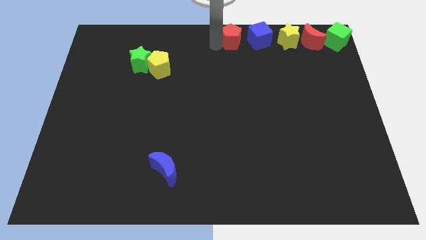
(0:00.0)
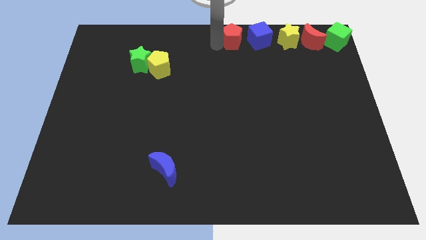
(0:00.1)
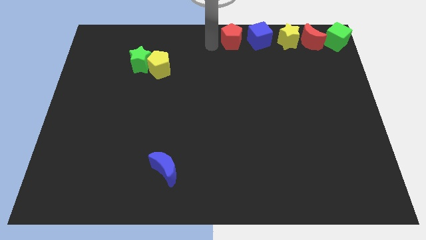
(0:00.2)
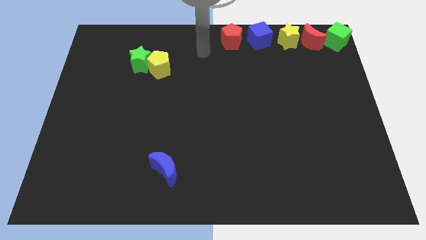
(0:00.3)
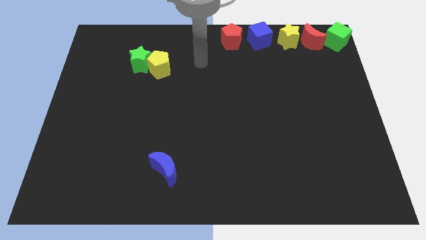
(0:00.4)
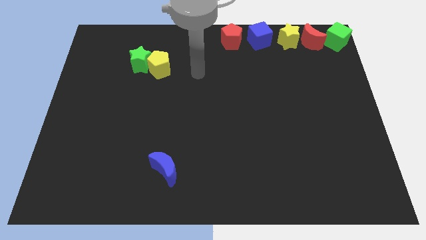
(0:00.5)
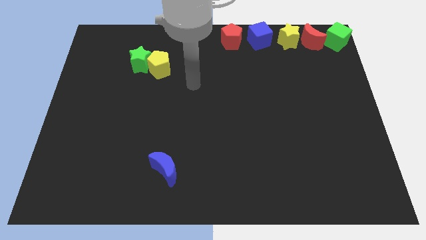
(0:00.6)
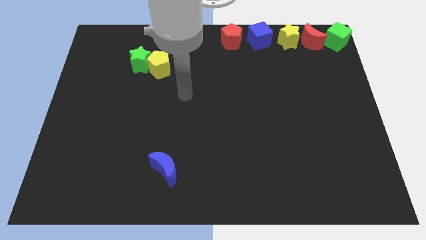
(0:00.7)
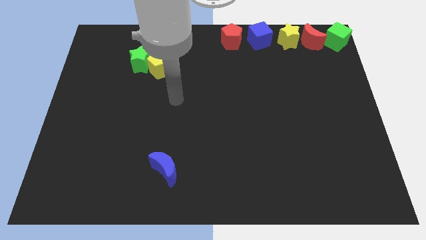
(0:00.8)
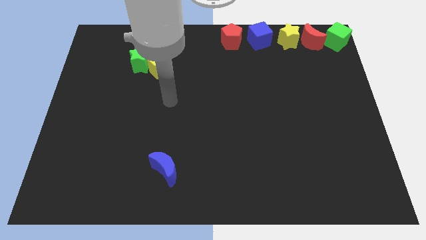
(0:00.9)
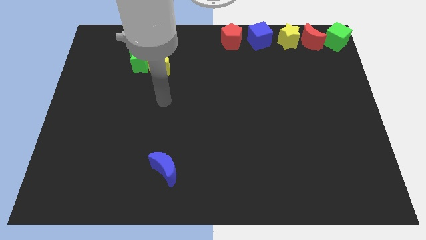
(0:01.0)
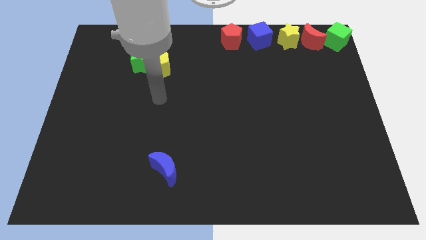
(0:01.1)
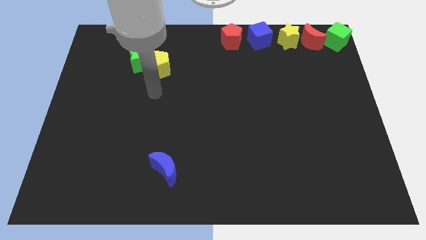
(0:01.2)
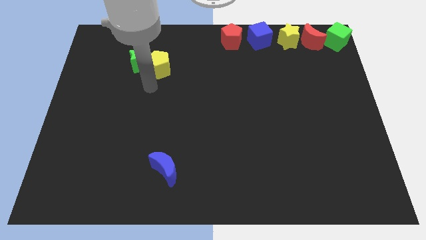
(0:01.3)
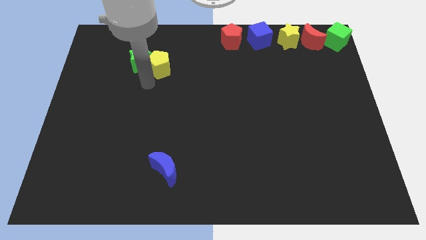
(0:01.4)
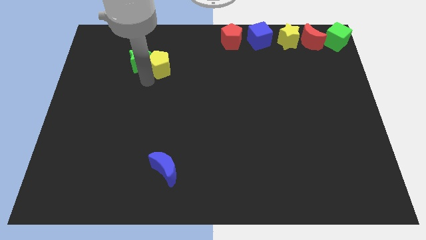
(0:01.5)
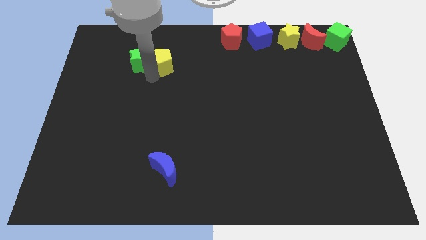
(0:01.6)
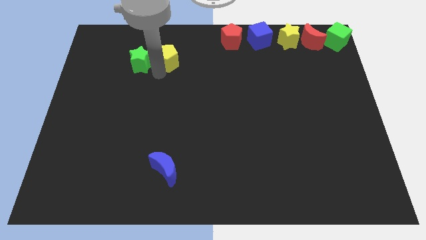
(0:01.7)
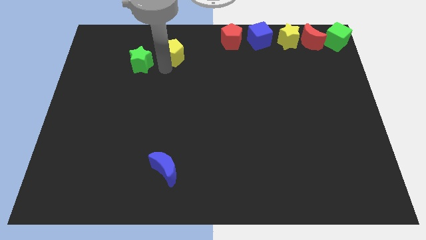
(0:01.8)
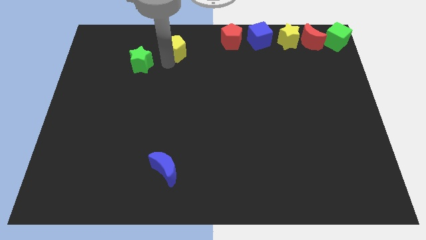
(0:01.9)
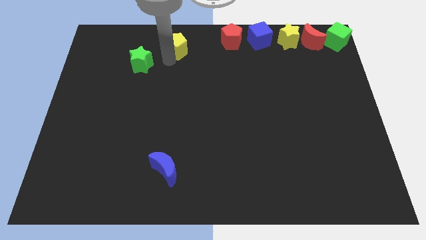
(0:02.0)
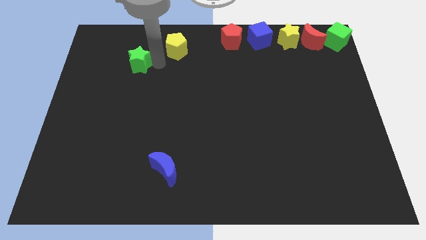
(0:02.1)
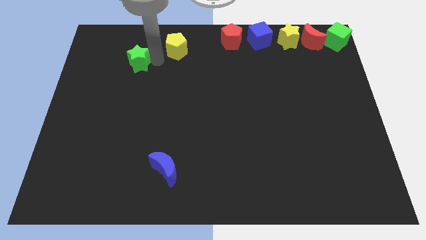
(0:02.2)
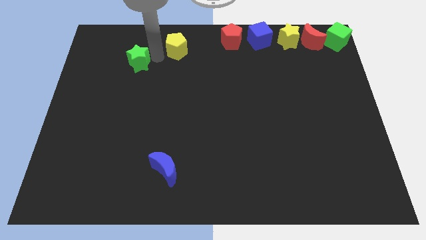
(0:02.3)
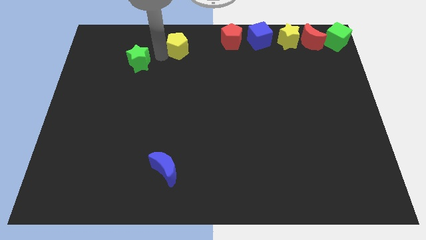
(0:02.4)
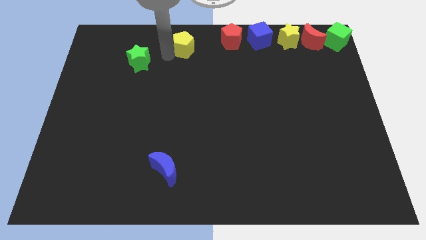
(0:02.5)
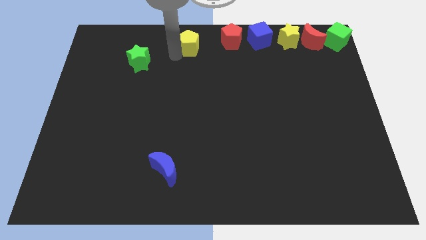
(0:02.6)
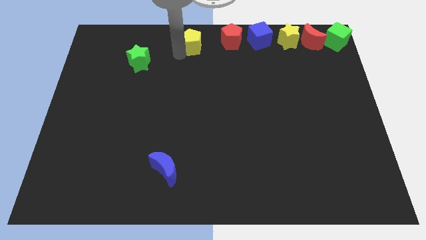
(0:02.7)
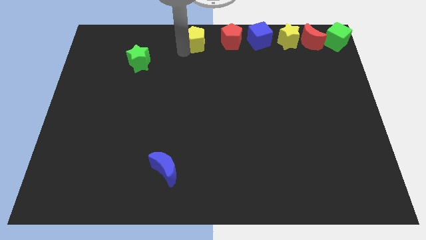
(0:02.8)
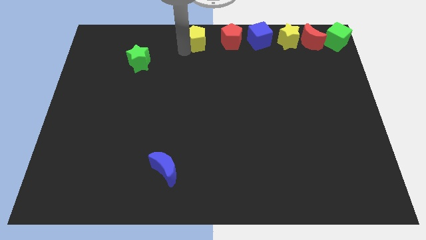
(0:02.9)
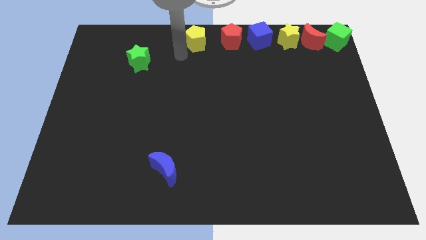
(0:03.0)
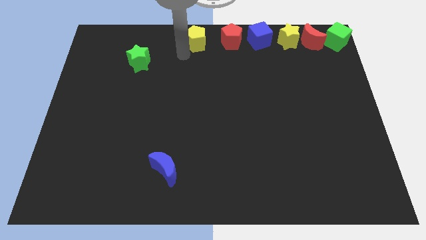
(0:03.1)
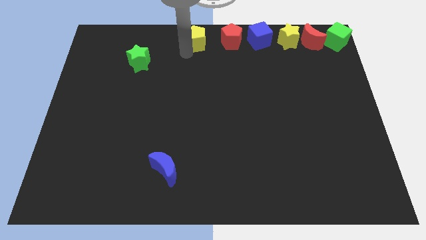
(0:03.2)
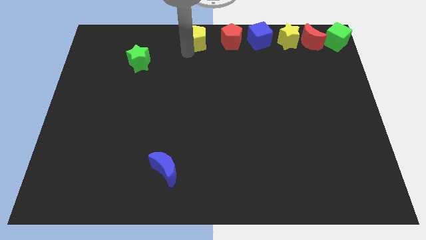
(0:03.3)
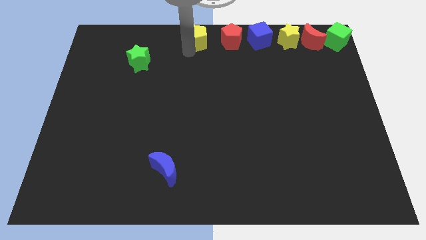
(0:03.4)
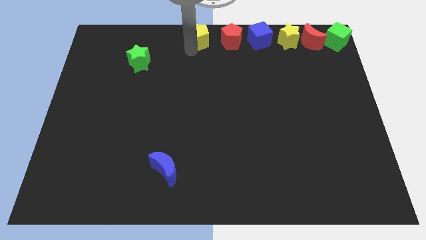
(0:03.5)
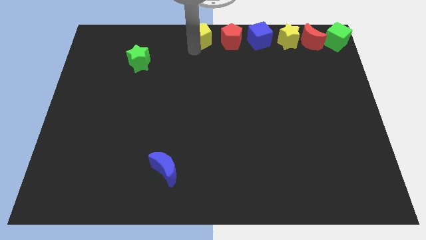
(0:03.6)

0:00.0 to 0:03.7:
separate the yellow pentagon from the green star

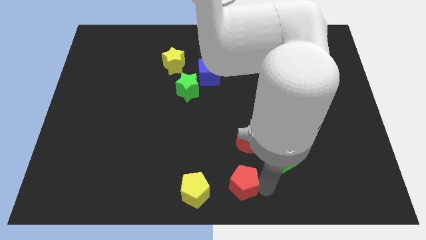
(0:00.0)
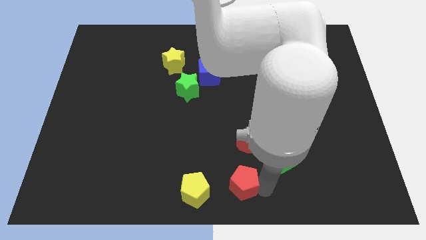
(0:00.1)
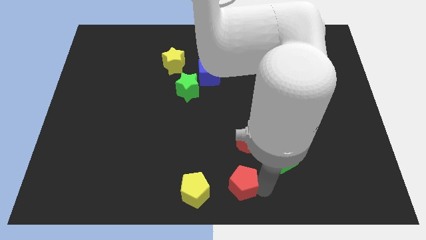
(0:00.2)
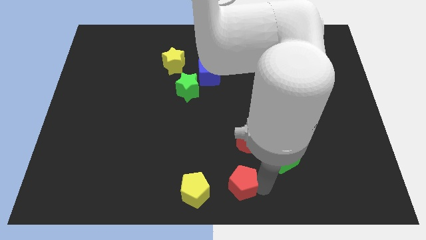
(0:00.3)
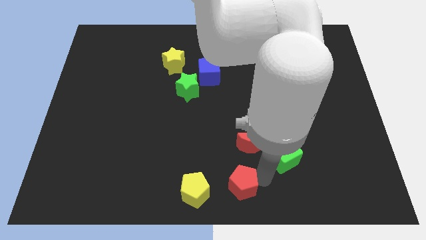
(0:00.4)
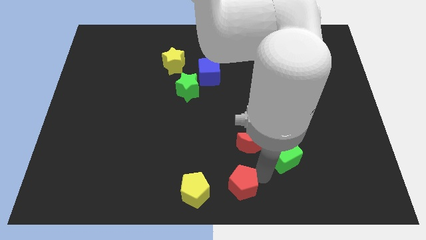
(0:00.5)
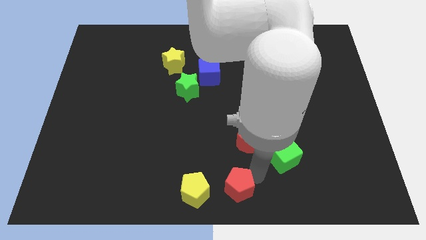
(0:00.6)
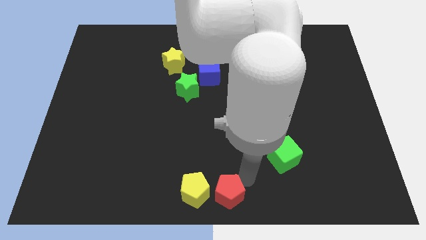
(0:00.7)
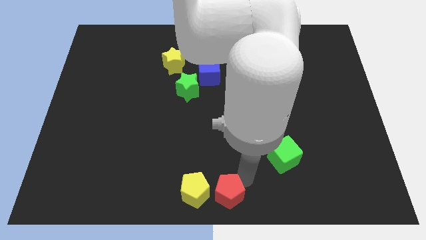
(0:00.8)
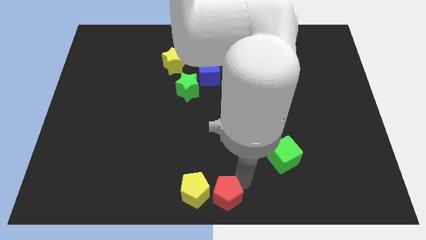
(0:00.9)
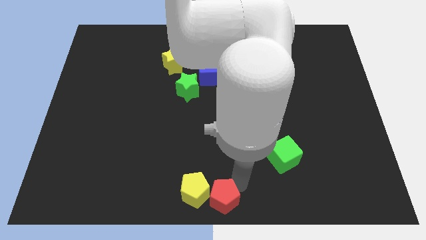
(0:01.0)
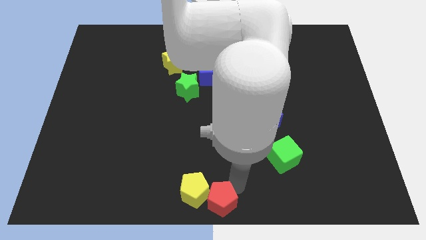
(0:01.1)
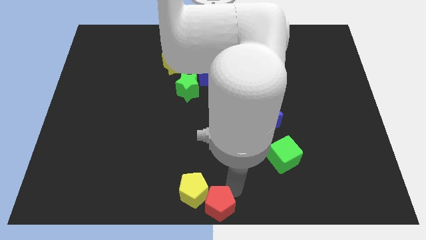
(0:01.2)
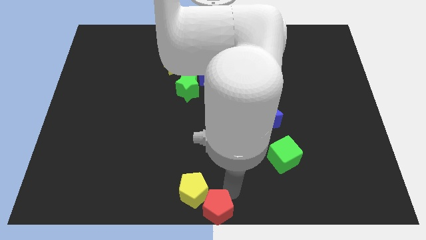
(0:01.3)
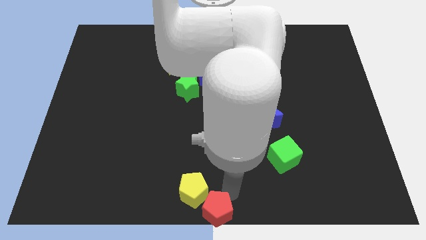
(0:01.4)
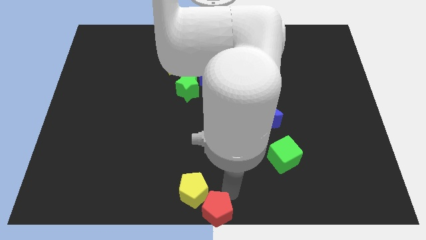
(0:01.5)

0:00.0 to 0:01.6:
push the red pentagon to the bottom center of the board

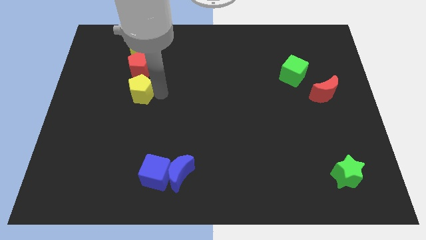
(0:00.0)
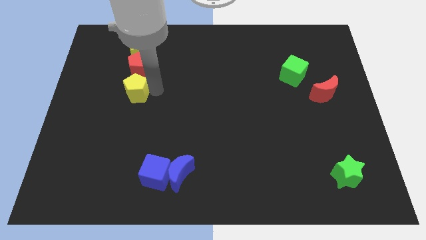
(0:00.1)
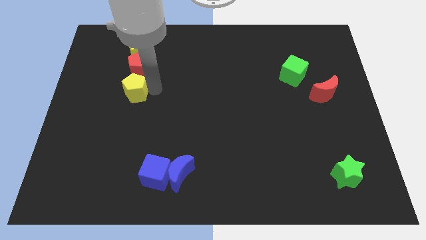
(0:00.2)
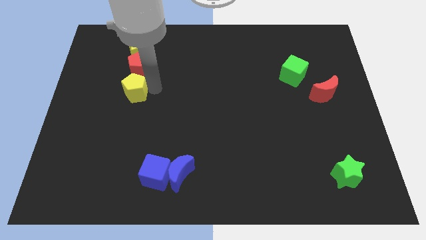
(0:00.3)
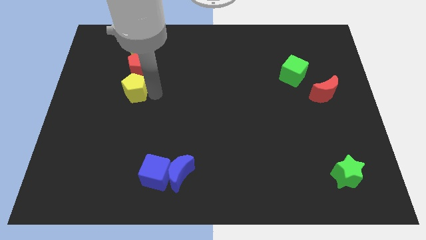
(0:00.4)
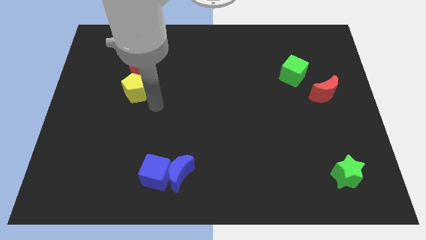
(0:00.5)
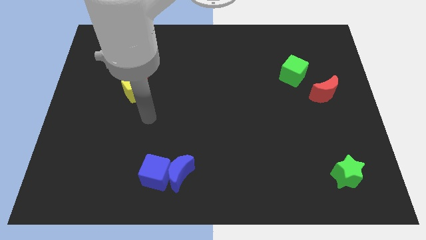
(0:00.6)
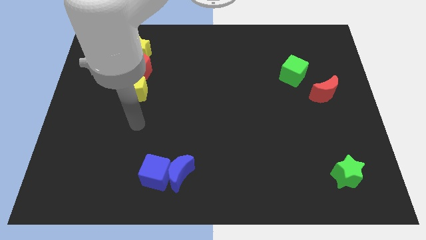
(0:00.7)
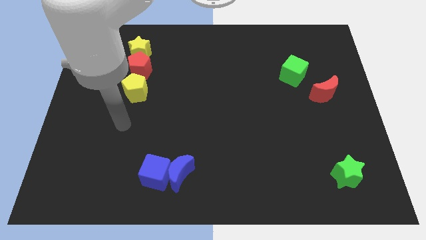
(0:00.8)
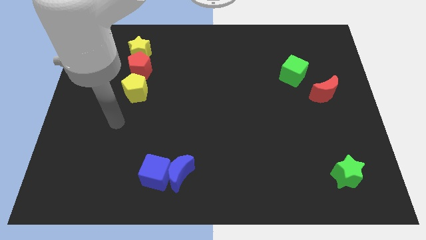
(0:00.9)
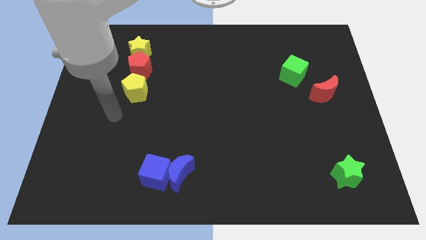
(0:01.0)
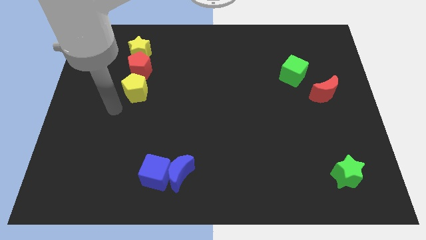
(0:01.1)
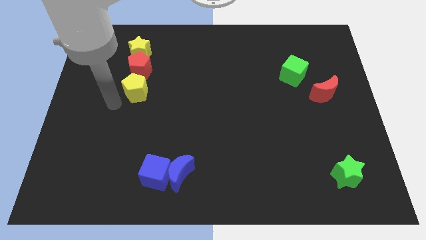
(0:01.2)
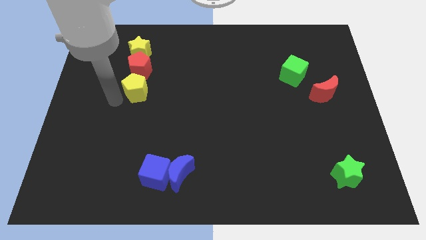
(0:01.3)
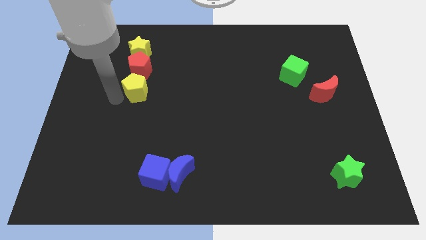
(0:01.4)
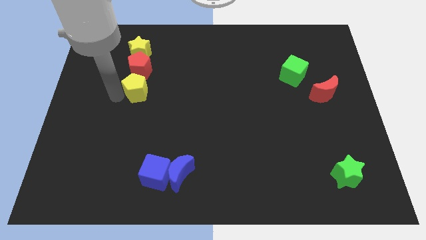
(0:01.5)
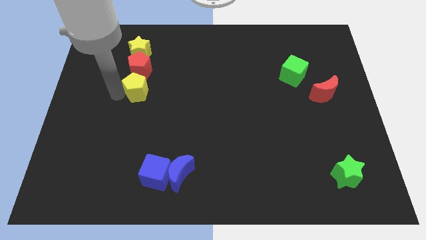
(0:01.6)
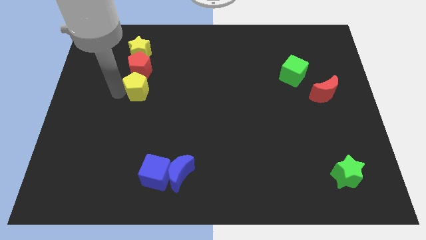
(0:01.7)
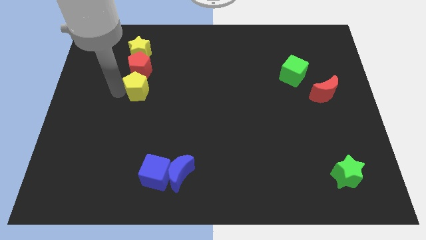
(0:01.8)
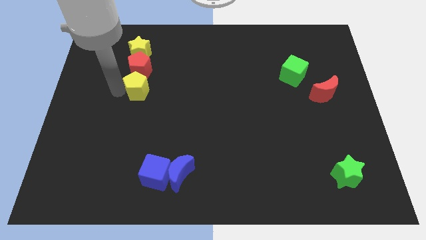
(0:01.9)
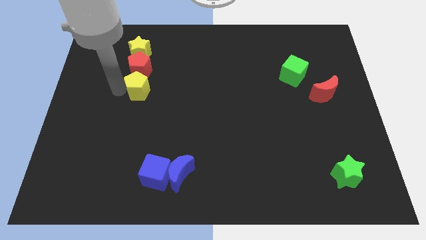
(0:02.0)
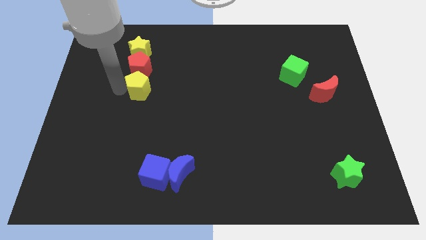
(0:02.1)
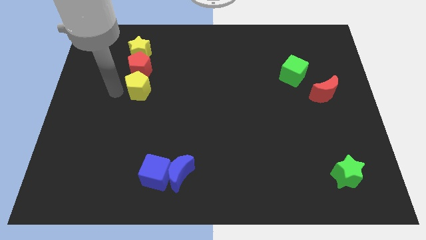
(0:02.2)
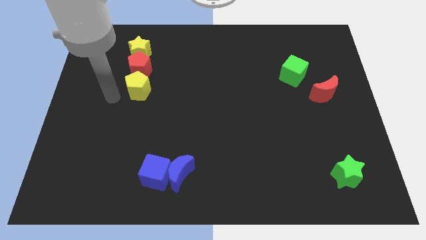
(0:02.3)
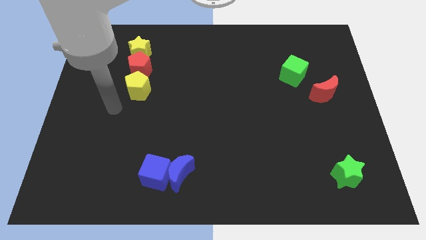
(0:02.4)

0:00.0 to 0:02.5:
adjust the yellow pentagon at the bottom of red pentagon

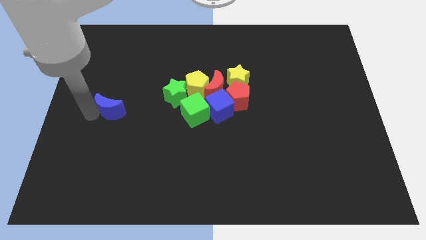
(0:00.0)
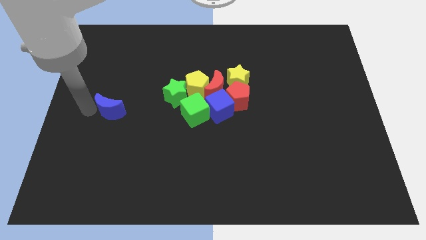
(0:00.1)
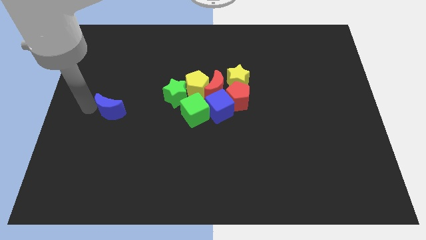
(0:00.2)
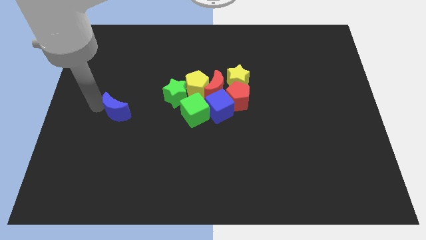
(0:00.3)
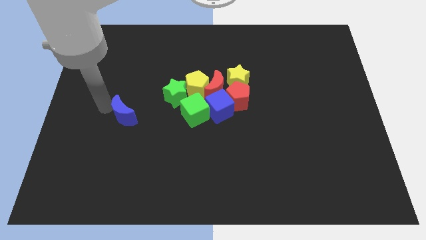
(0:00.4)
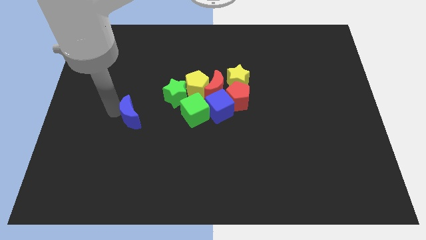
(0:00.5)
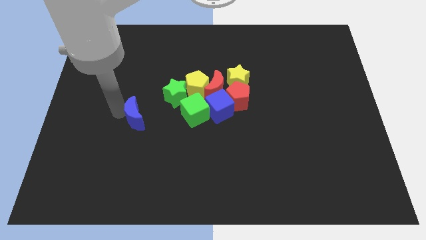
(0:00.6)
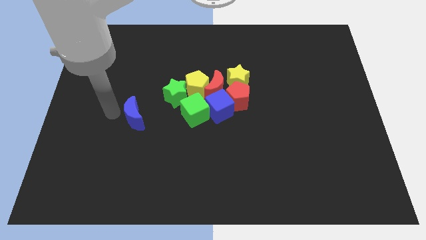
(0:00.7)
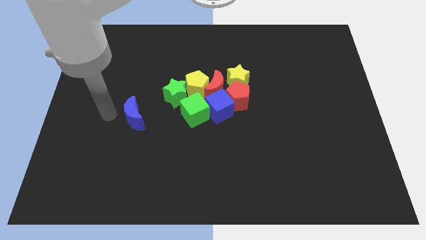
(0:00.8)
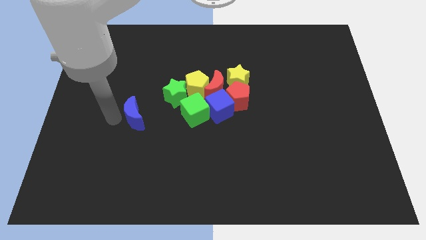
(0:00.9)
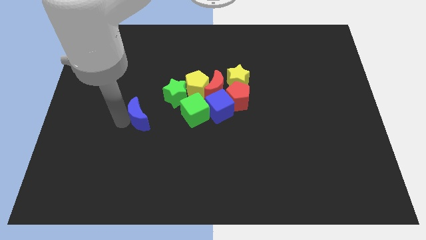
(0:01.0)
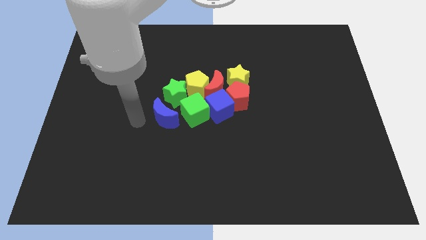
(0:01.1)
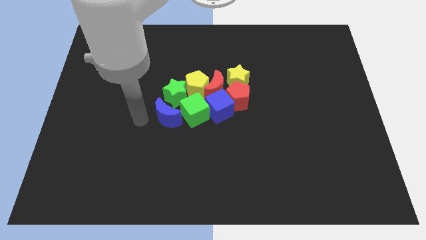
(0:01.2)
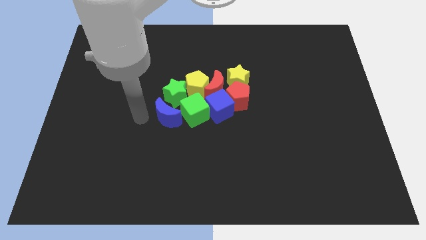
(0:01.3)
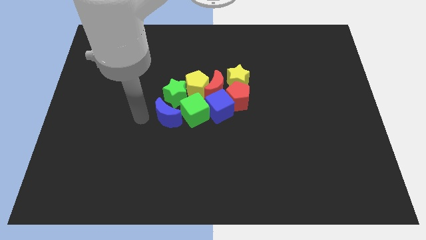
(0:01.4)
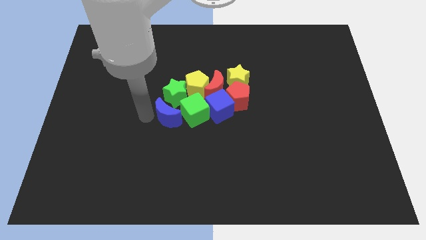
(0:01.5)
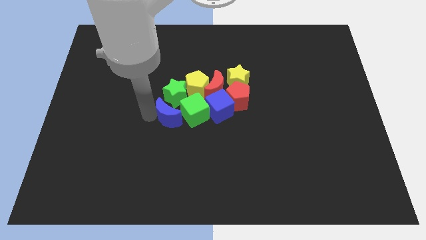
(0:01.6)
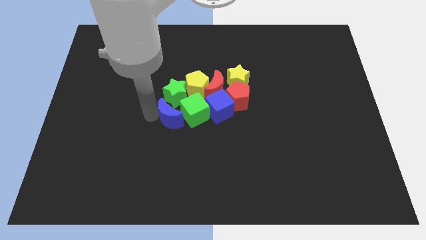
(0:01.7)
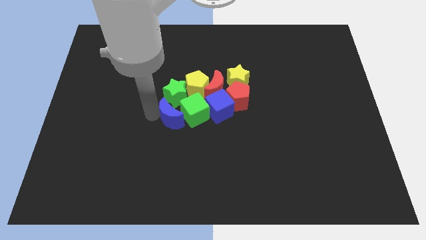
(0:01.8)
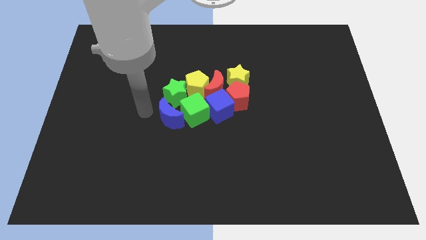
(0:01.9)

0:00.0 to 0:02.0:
move the blue crescent towards the left side of the green cube and green star
